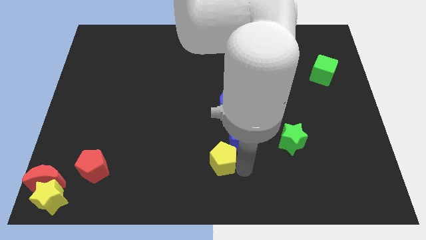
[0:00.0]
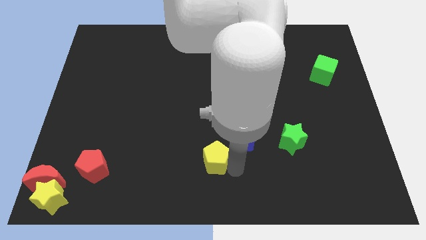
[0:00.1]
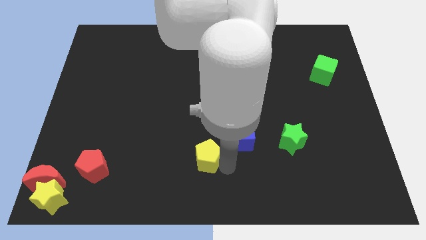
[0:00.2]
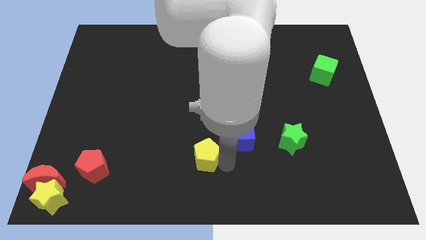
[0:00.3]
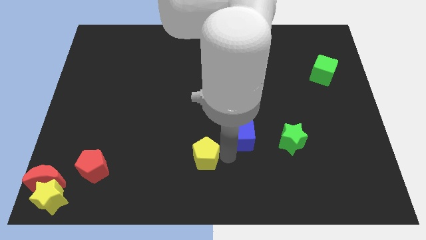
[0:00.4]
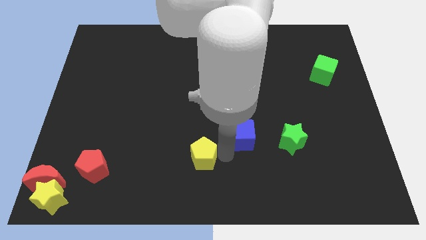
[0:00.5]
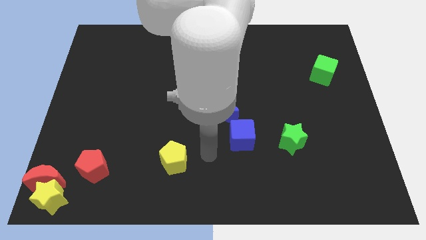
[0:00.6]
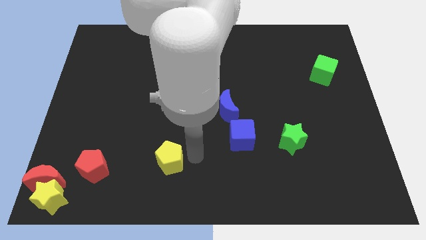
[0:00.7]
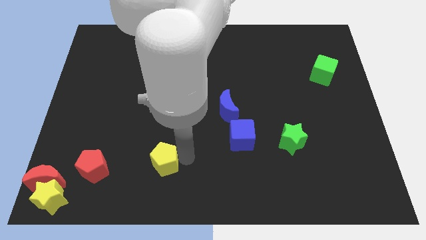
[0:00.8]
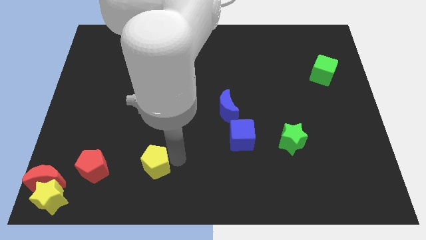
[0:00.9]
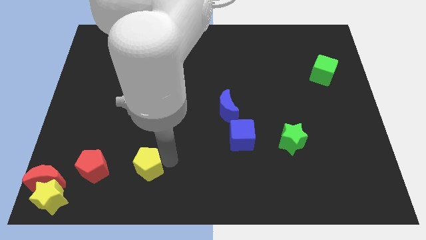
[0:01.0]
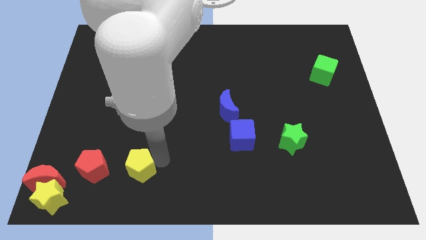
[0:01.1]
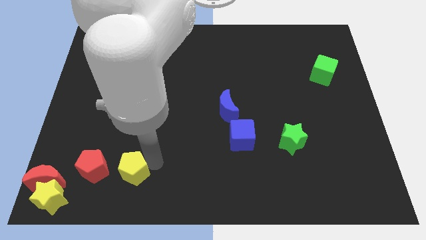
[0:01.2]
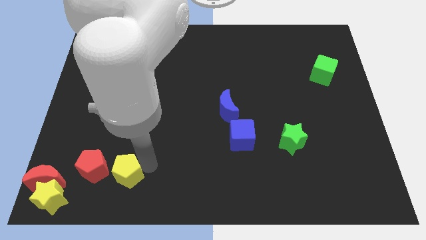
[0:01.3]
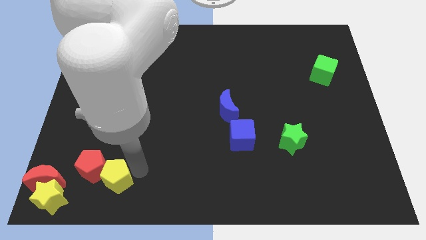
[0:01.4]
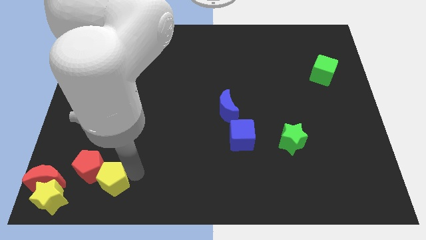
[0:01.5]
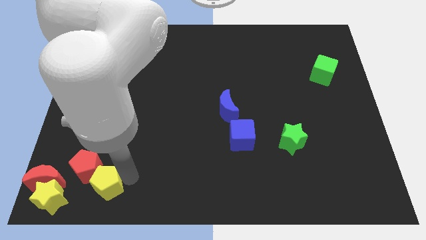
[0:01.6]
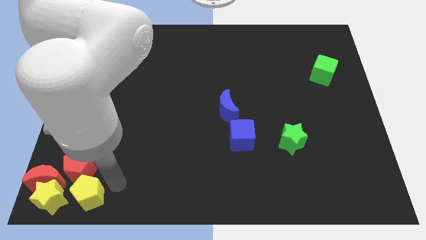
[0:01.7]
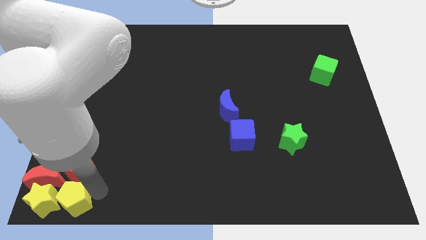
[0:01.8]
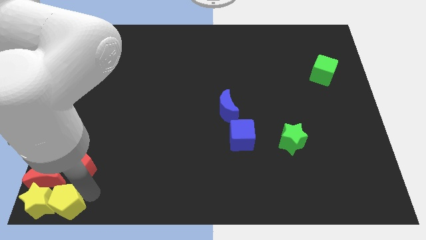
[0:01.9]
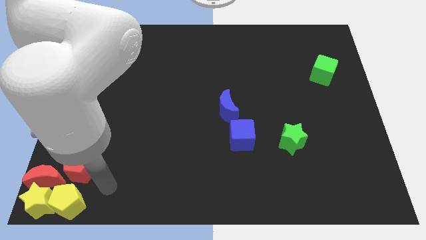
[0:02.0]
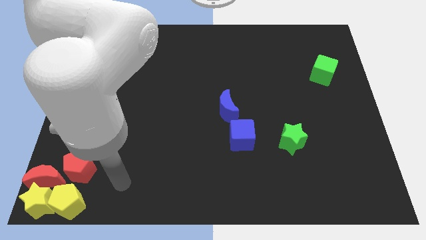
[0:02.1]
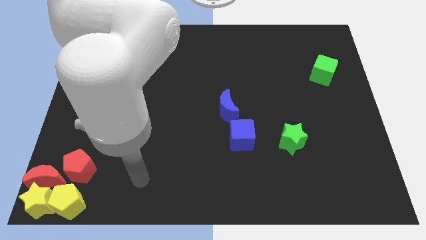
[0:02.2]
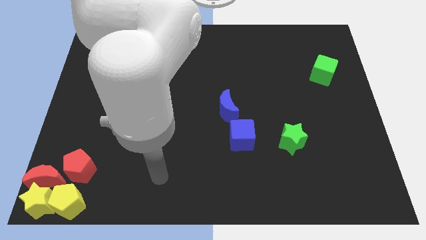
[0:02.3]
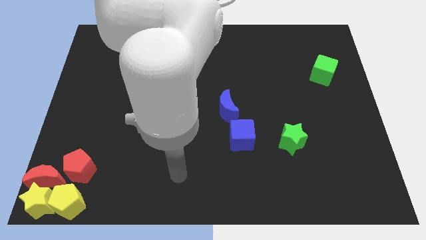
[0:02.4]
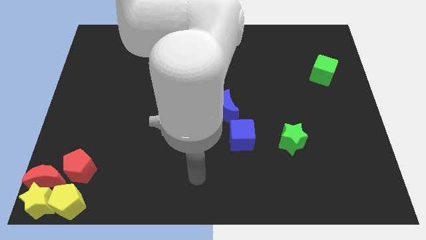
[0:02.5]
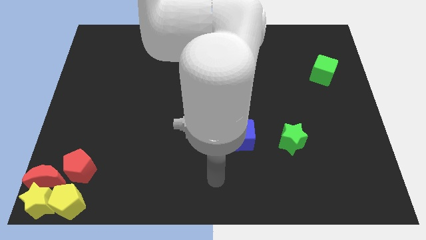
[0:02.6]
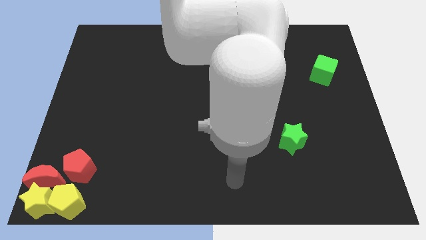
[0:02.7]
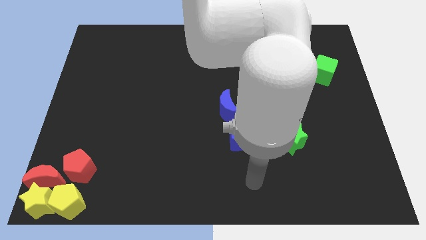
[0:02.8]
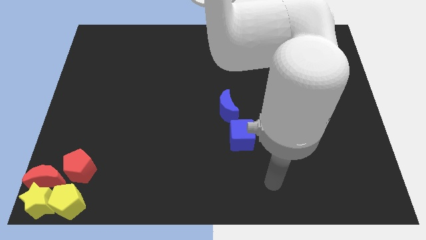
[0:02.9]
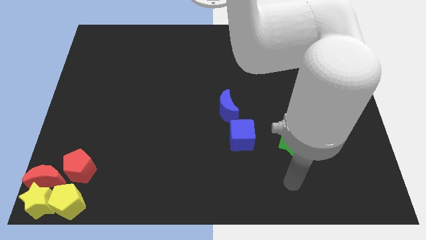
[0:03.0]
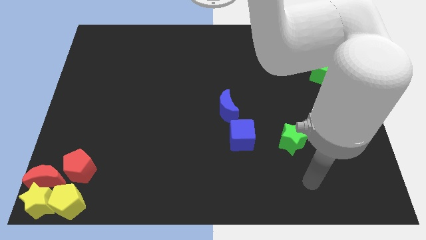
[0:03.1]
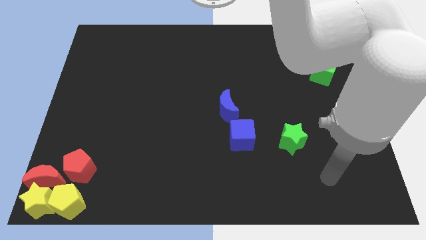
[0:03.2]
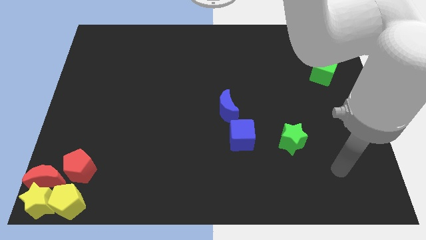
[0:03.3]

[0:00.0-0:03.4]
place the yellow pentagon right to the yellow star

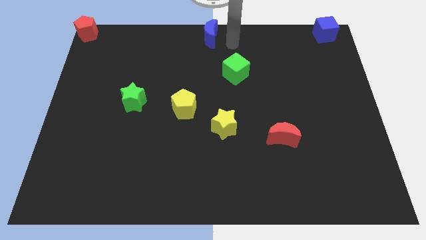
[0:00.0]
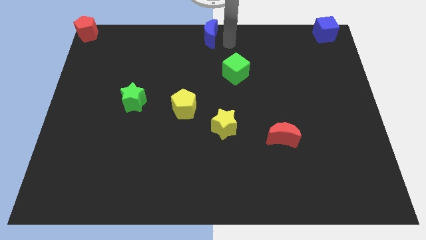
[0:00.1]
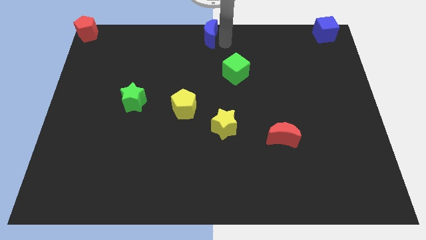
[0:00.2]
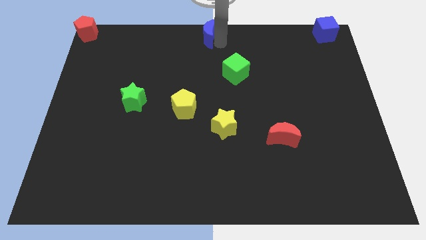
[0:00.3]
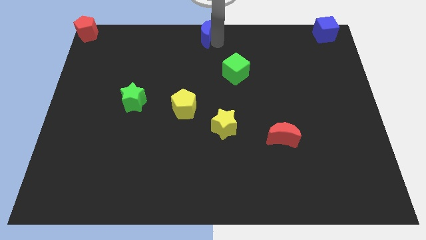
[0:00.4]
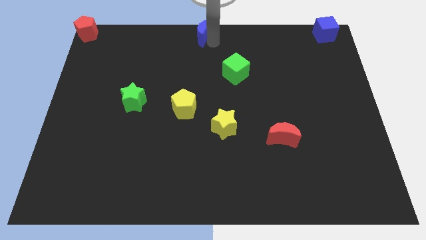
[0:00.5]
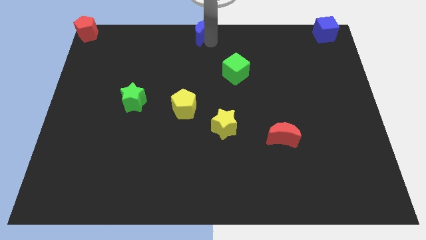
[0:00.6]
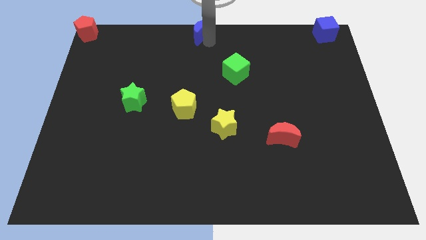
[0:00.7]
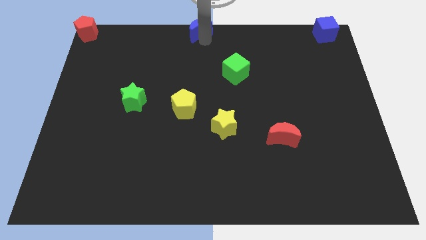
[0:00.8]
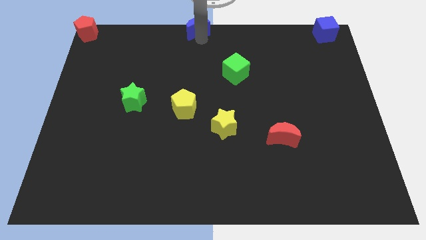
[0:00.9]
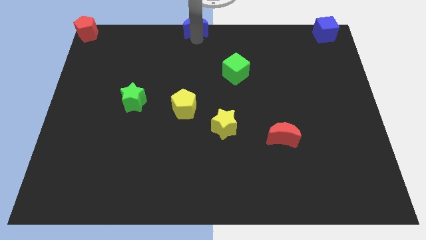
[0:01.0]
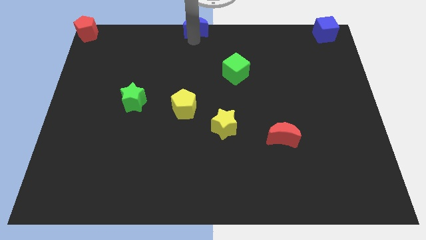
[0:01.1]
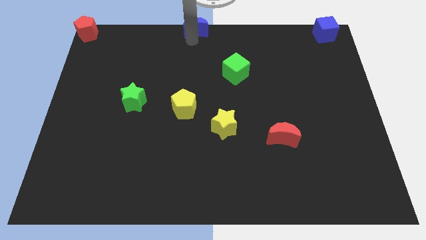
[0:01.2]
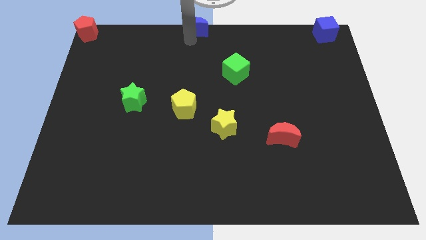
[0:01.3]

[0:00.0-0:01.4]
push the blue moon towards the top center of board

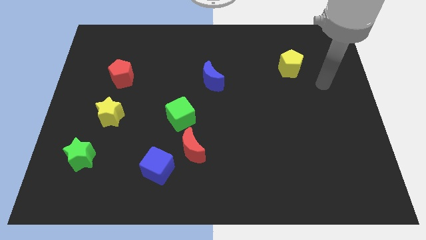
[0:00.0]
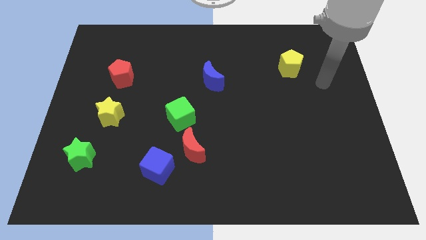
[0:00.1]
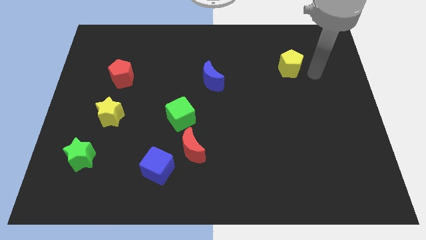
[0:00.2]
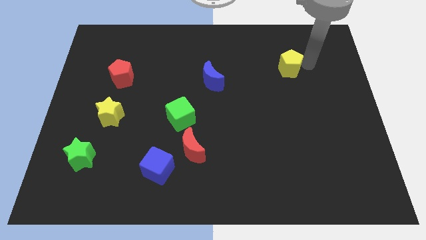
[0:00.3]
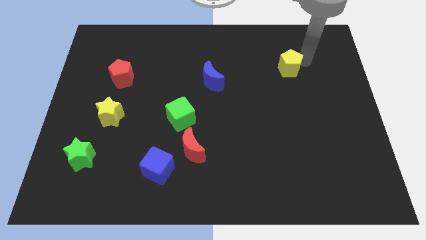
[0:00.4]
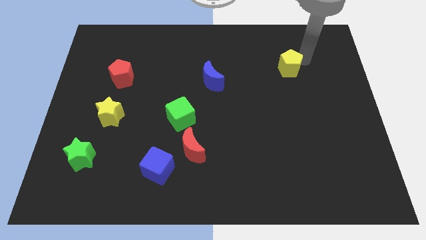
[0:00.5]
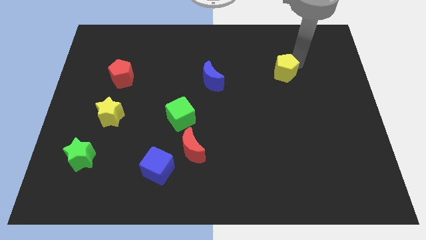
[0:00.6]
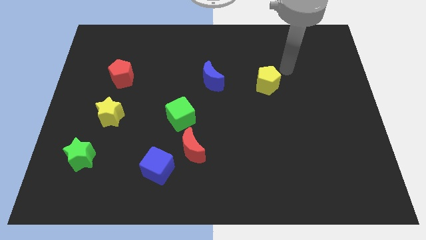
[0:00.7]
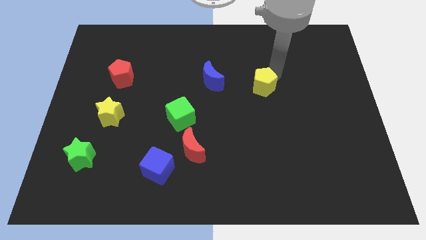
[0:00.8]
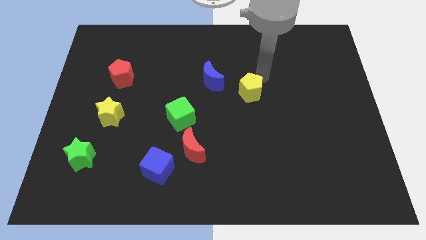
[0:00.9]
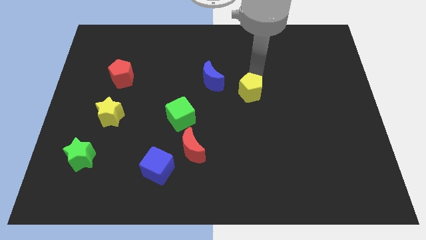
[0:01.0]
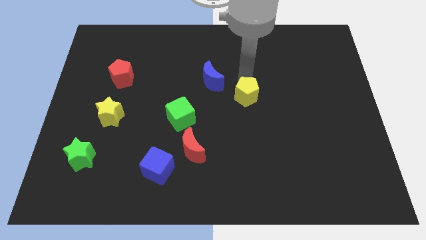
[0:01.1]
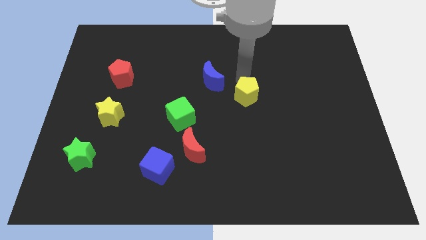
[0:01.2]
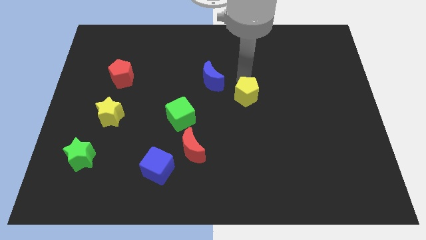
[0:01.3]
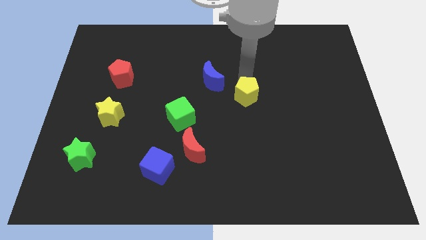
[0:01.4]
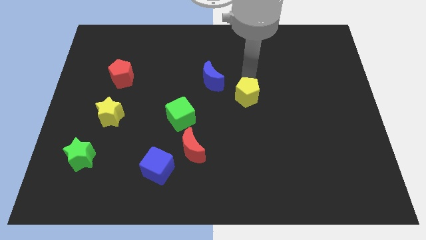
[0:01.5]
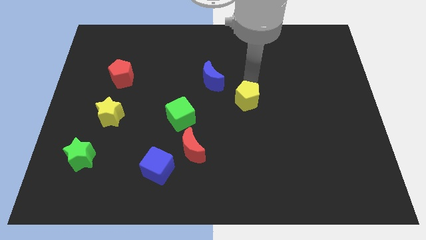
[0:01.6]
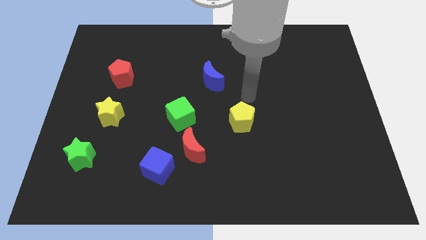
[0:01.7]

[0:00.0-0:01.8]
move the yellow pentagon down slightly

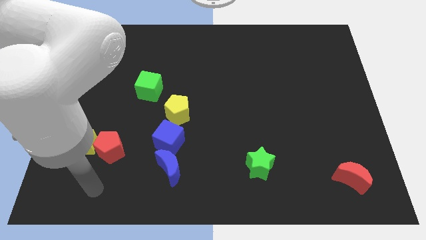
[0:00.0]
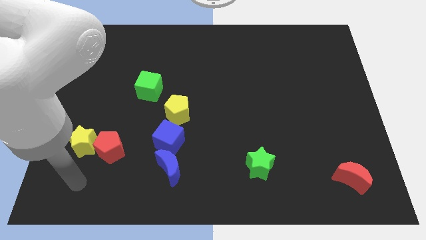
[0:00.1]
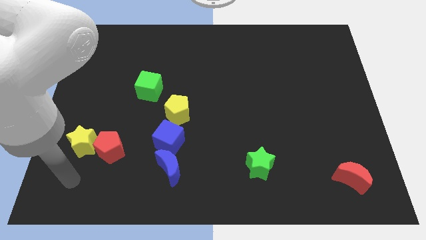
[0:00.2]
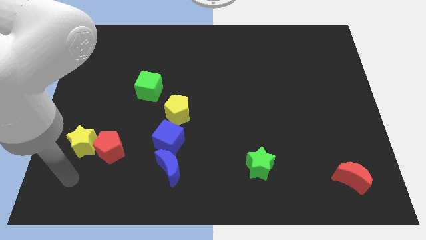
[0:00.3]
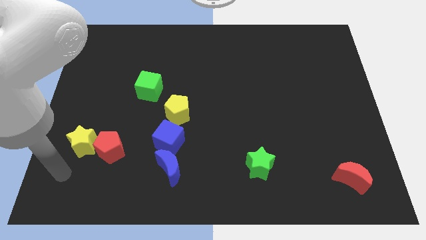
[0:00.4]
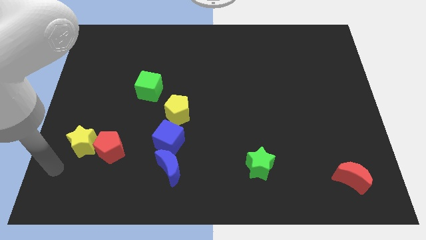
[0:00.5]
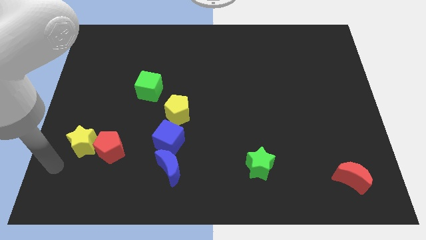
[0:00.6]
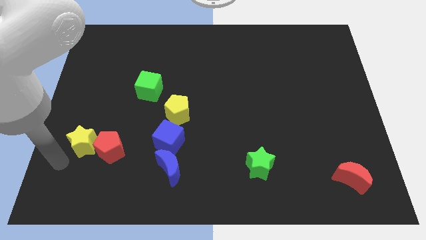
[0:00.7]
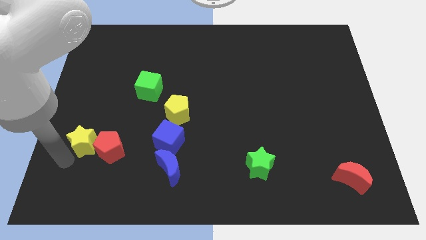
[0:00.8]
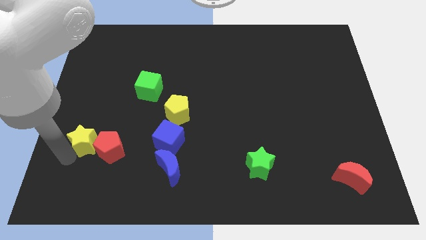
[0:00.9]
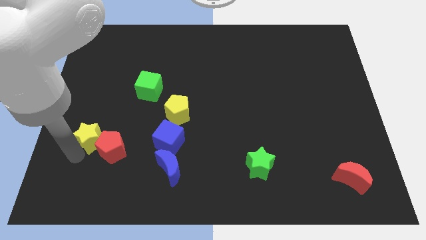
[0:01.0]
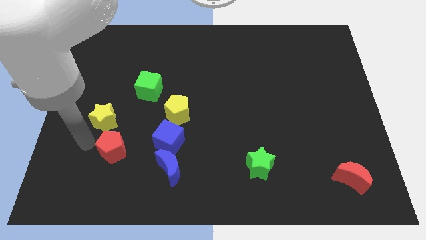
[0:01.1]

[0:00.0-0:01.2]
point your arm close to yellow star

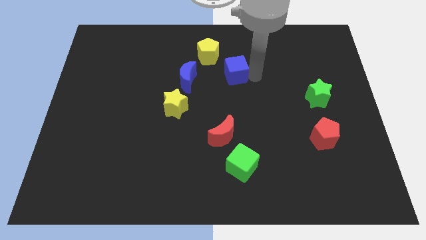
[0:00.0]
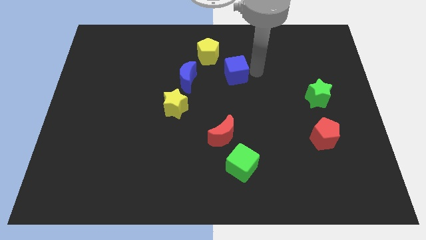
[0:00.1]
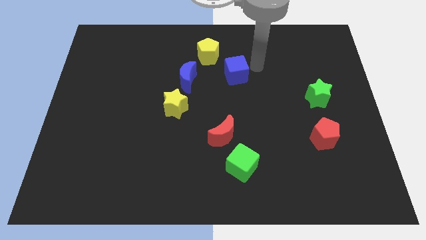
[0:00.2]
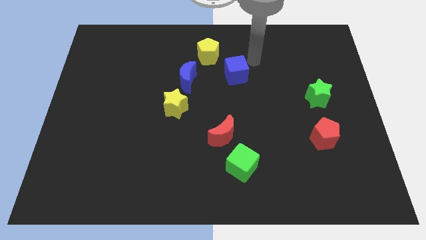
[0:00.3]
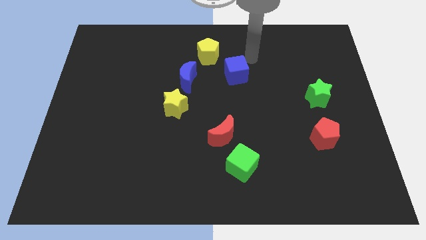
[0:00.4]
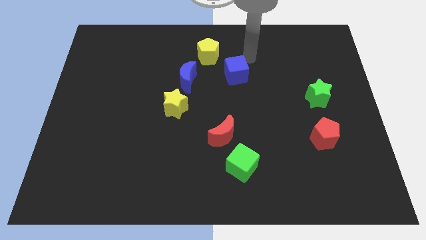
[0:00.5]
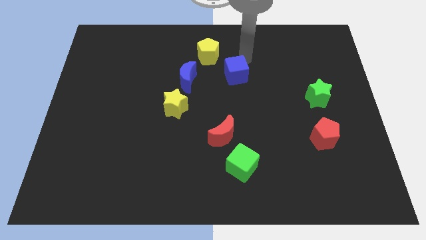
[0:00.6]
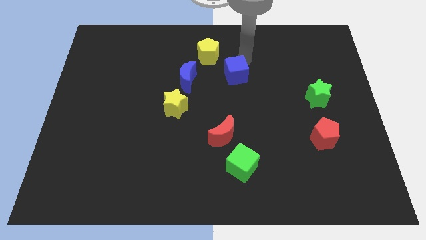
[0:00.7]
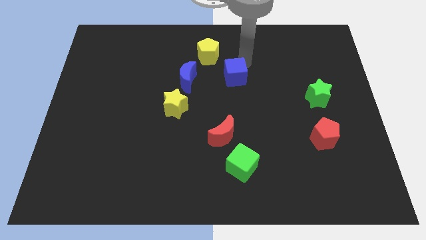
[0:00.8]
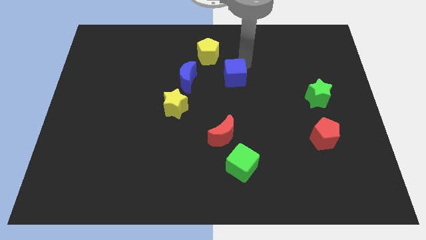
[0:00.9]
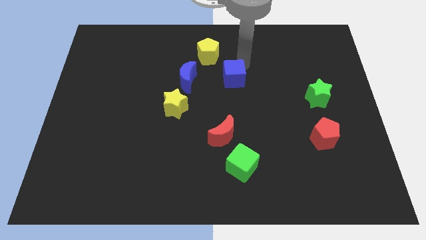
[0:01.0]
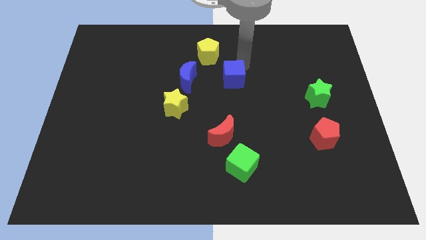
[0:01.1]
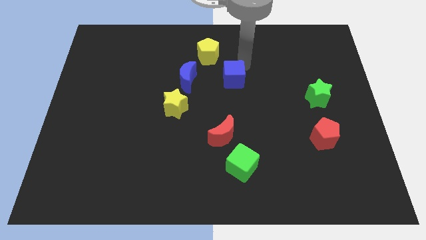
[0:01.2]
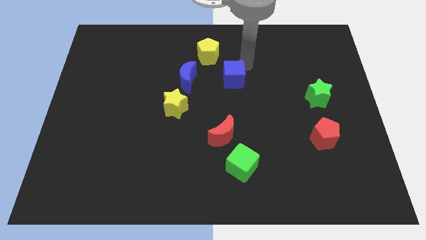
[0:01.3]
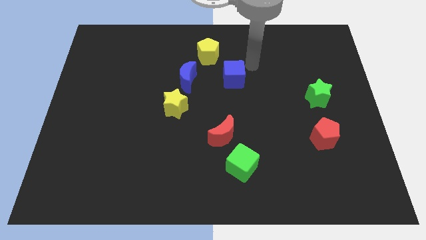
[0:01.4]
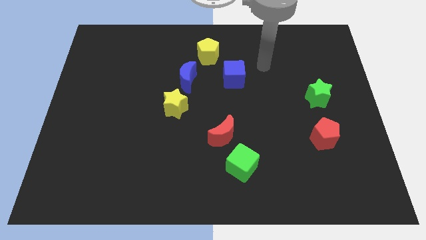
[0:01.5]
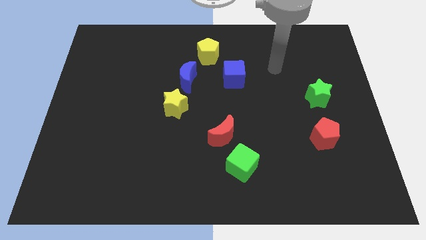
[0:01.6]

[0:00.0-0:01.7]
put the blue cube horizontally right to the blue moon
